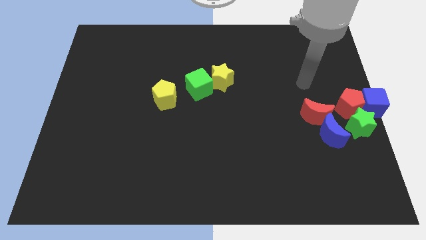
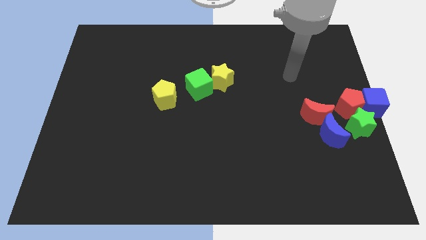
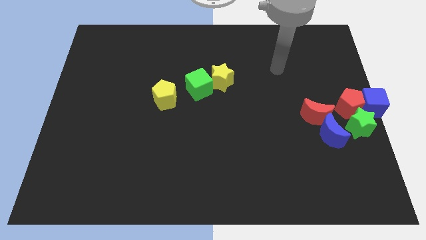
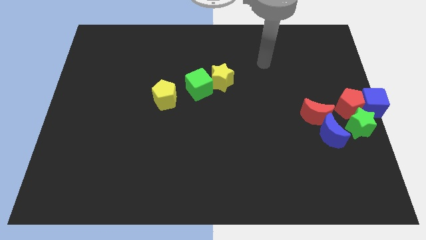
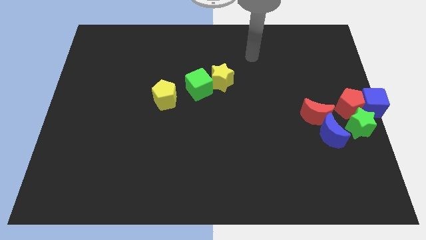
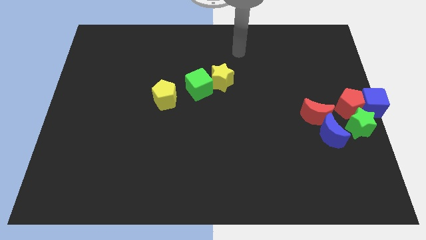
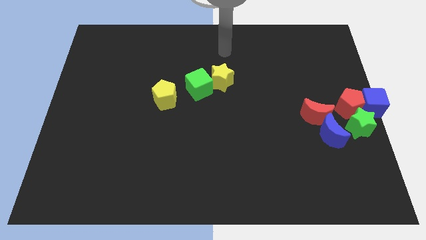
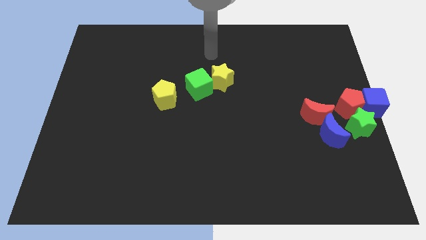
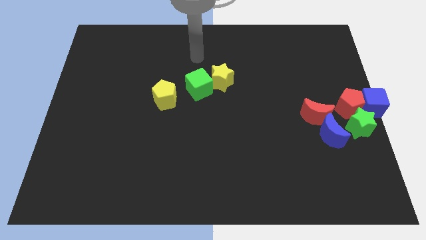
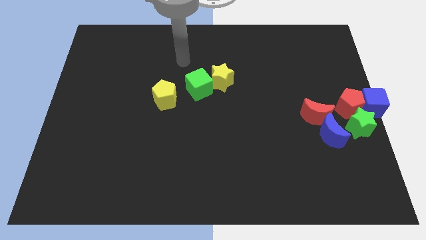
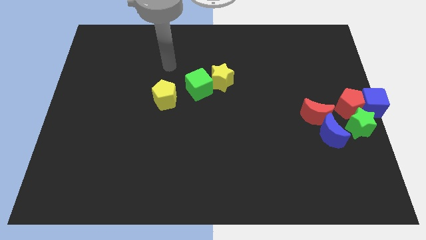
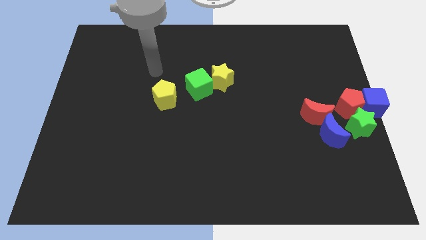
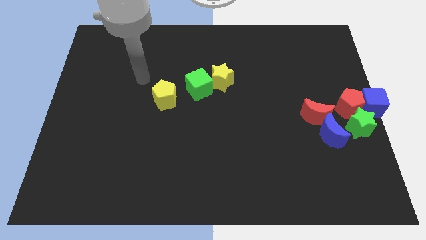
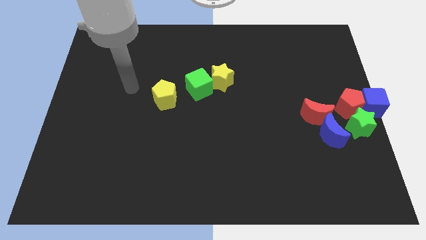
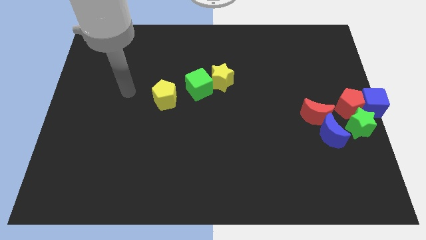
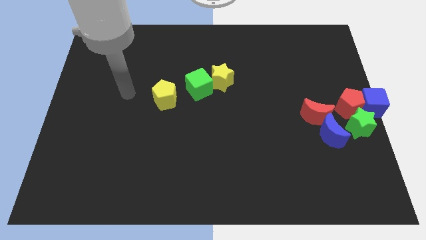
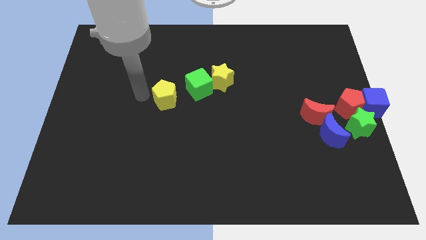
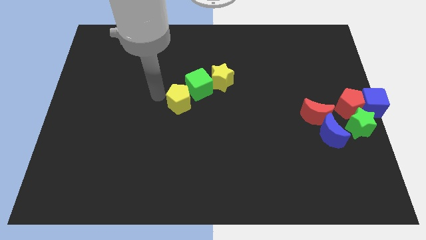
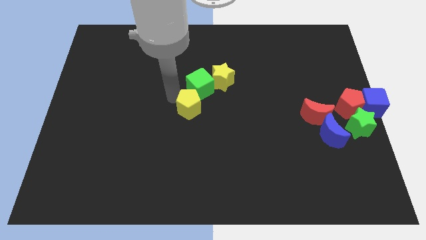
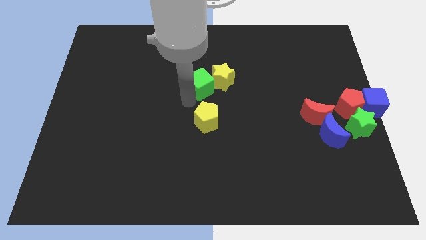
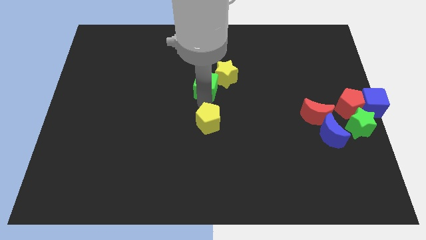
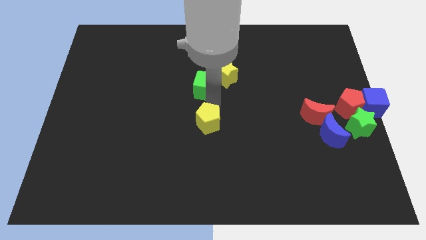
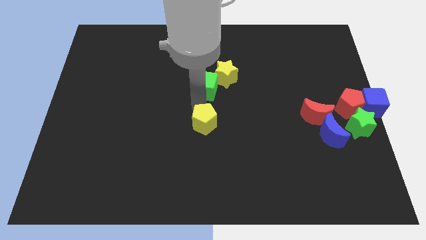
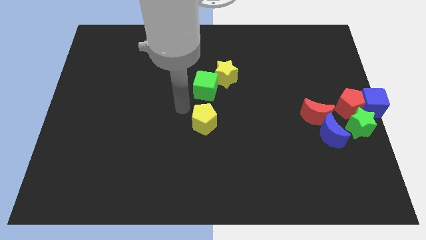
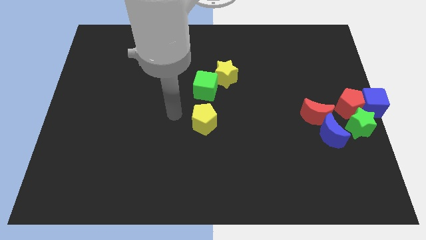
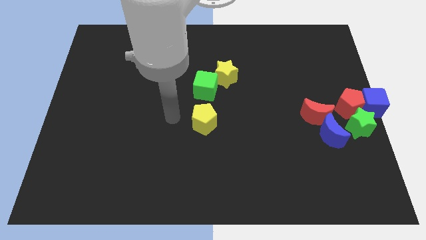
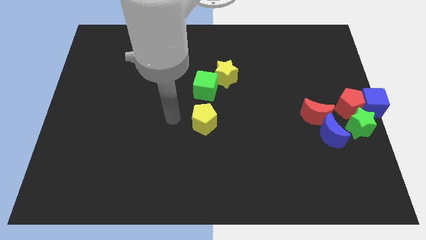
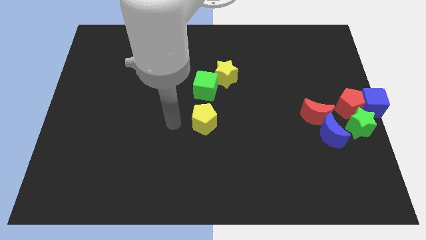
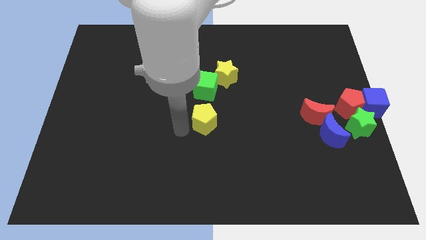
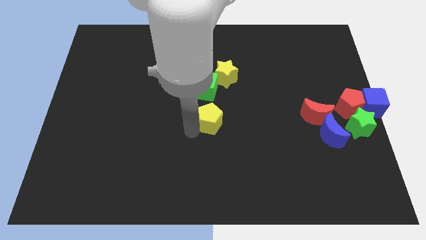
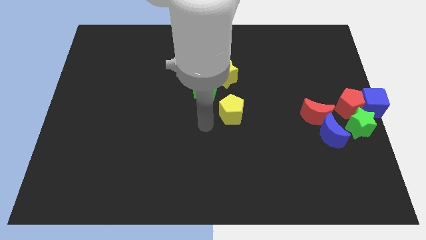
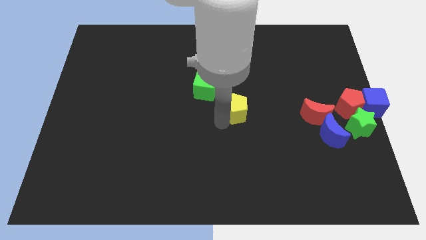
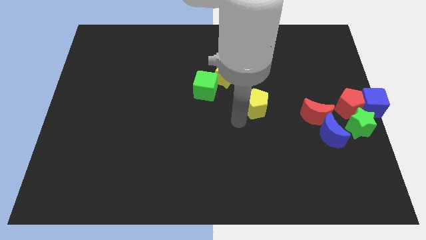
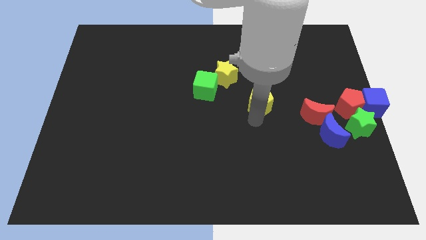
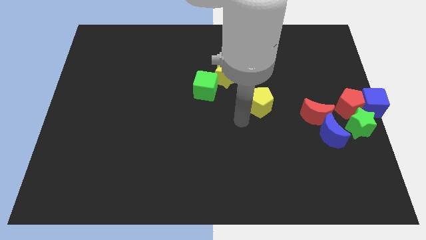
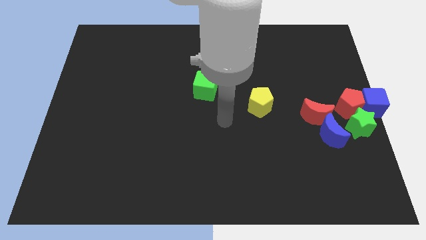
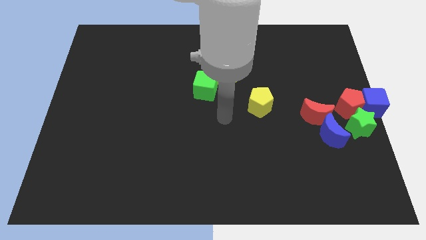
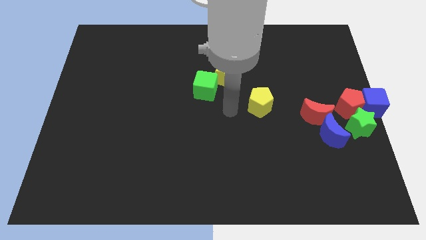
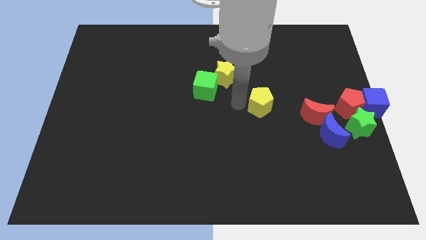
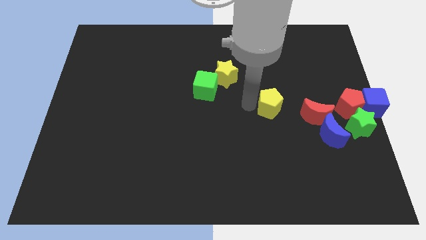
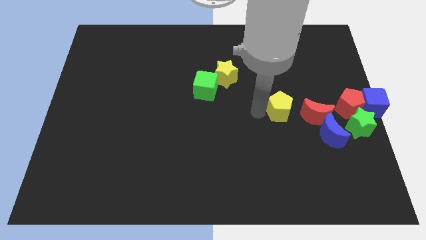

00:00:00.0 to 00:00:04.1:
push the yellow pentagon to the left of the red crescent

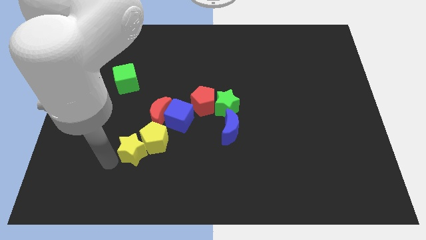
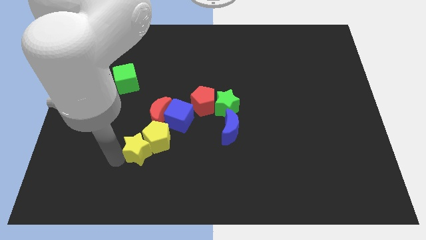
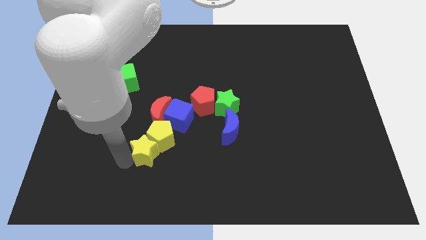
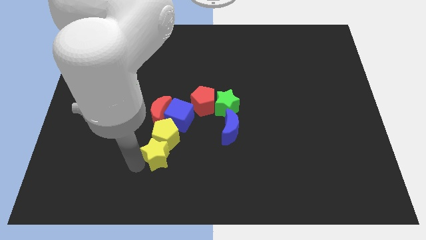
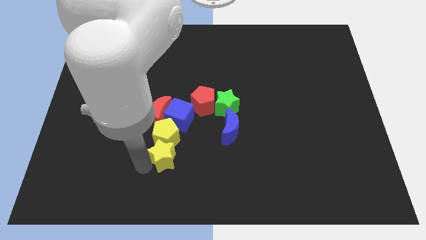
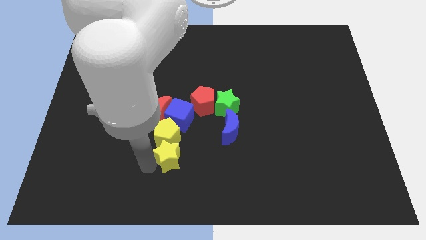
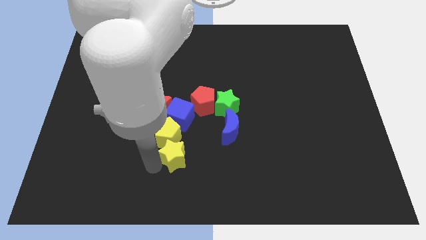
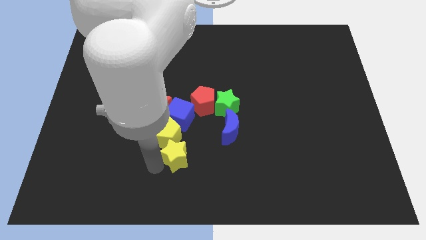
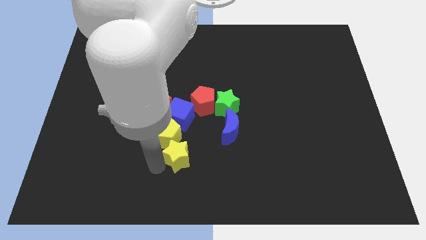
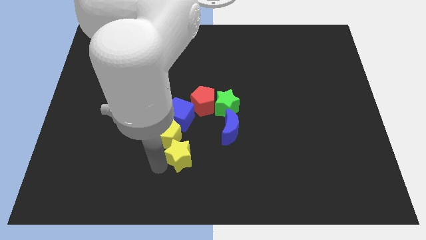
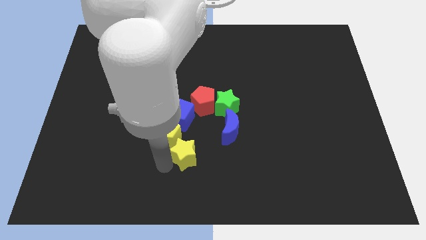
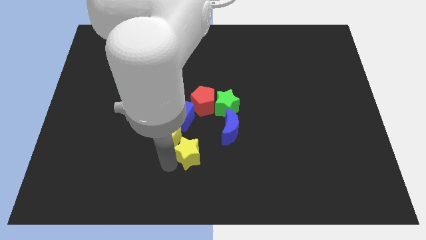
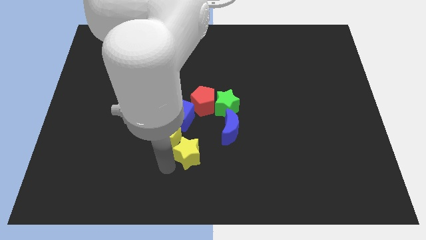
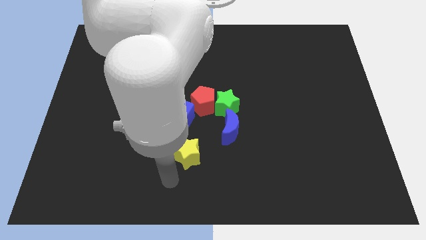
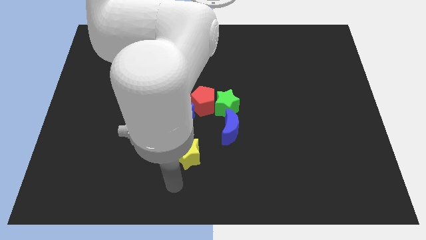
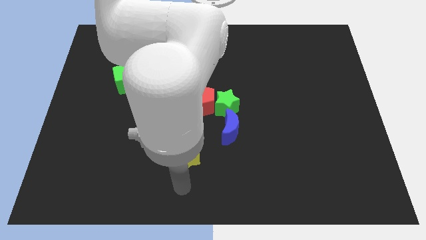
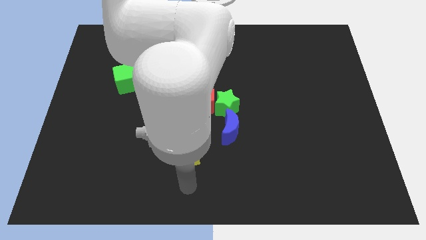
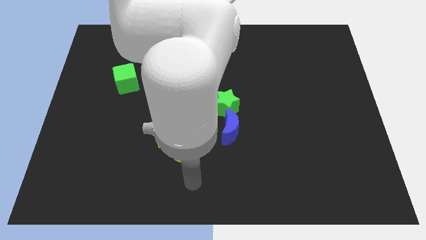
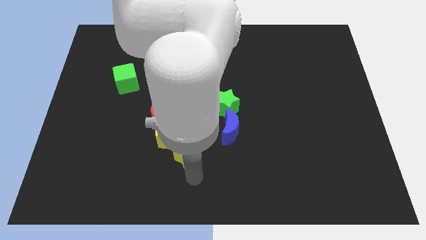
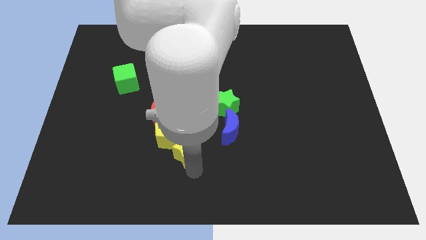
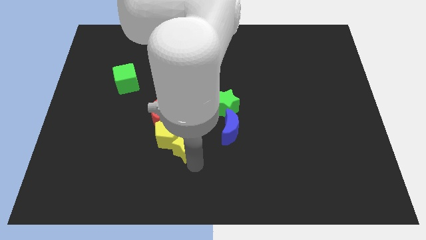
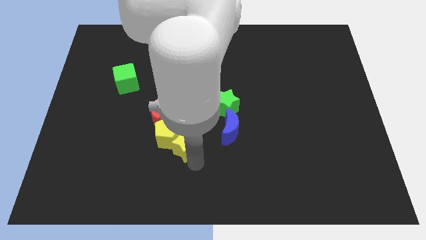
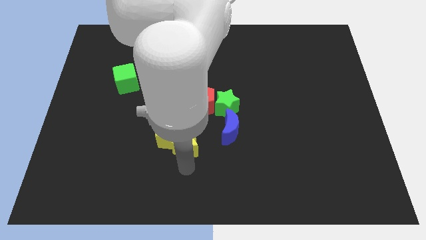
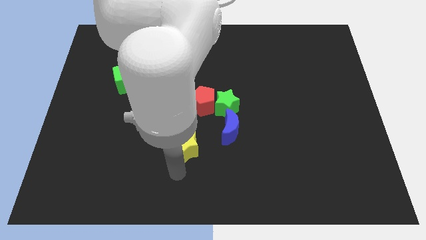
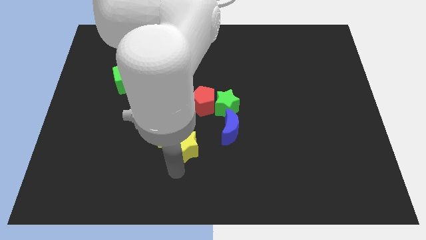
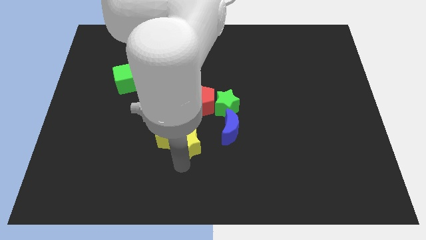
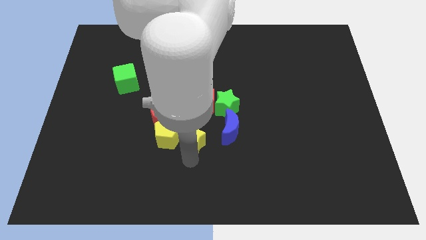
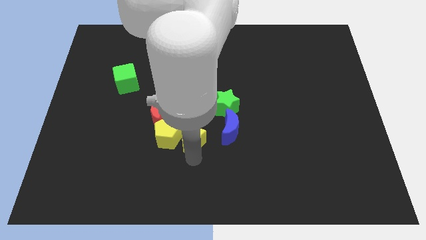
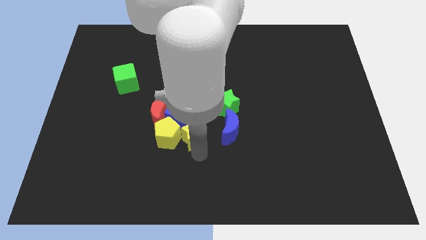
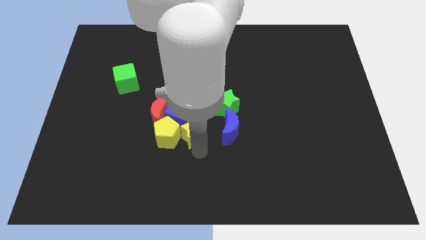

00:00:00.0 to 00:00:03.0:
push the yellow star to the right of the yellow pentagon

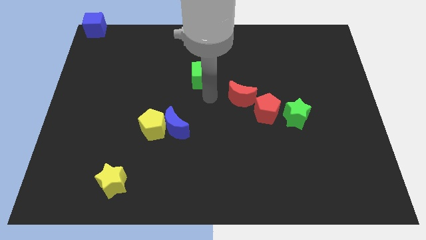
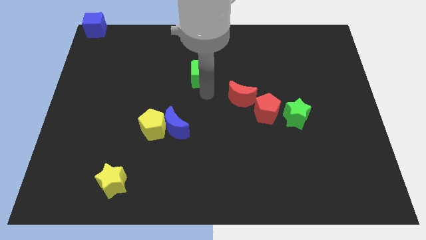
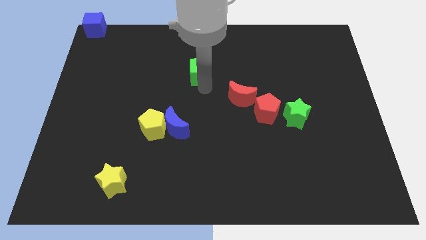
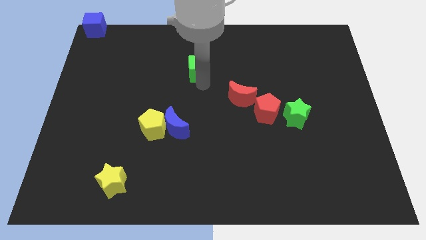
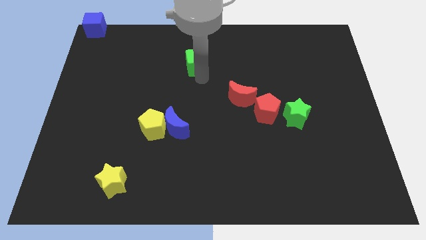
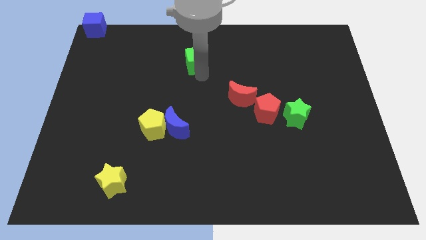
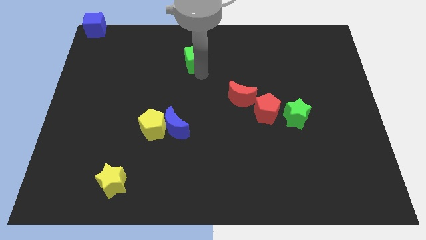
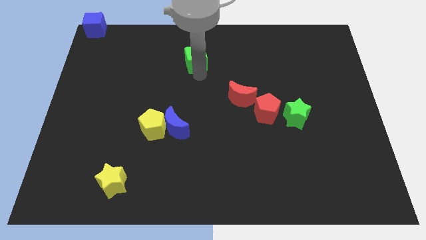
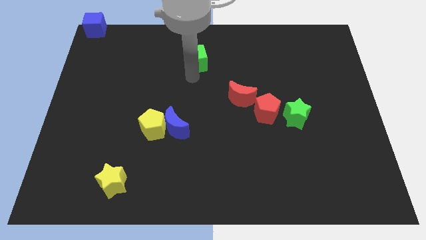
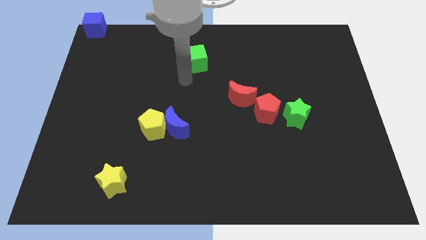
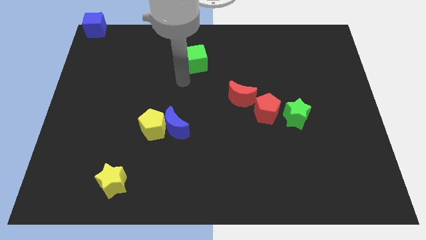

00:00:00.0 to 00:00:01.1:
move green cube to the top side of the board

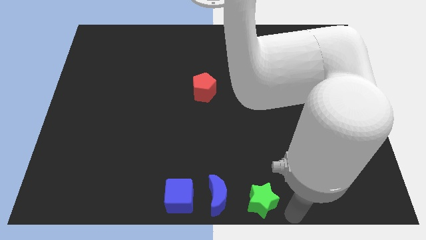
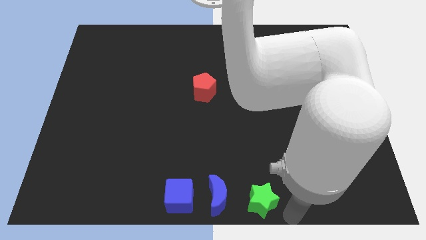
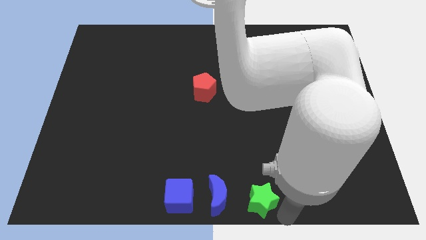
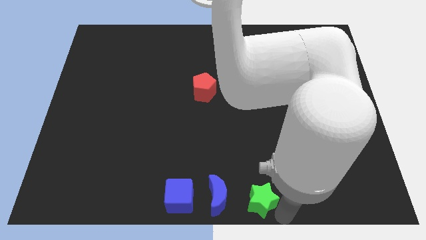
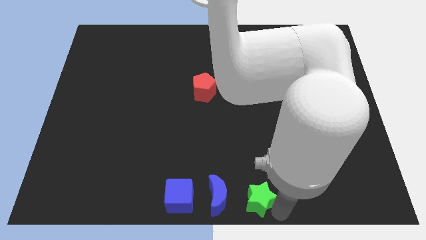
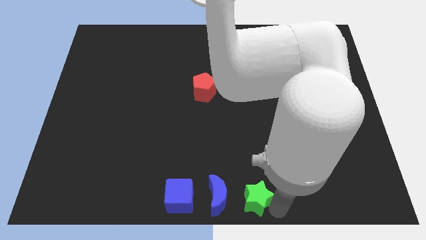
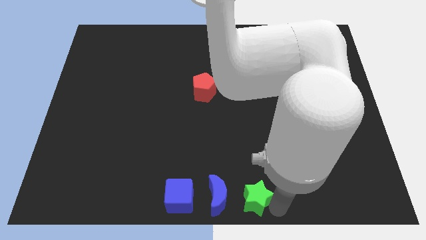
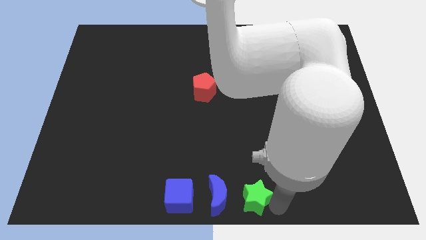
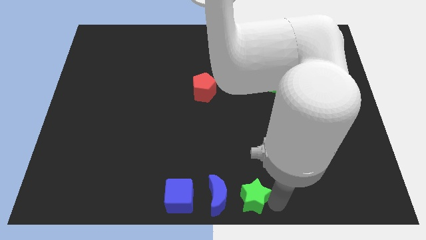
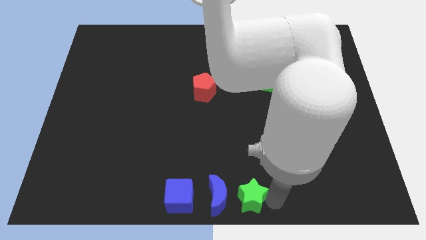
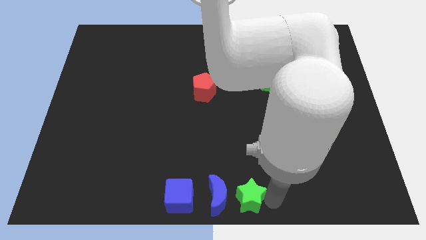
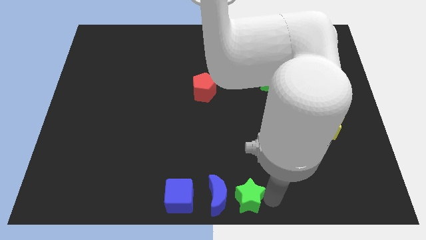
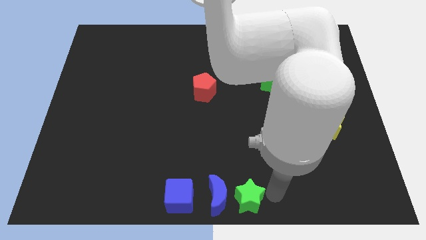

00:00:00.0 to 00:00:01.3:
move green star towards blue moon
